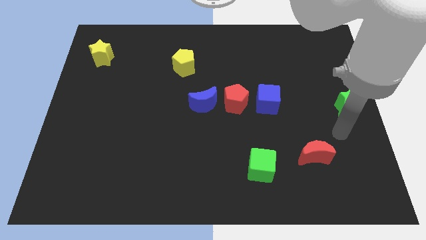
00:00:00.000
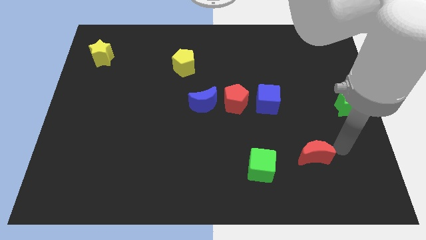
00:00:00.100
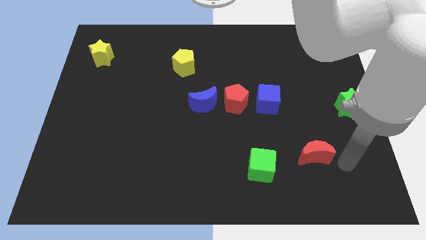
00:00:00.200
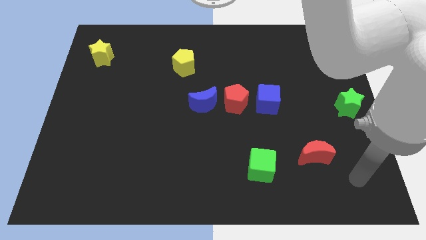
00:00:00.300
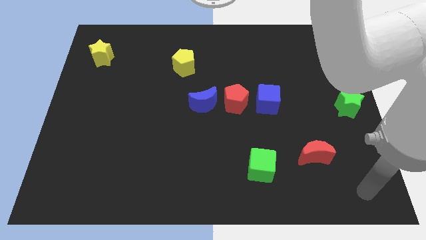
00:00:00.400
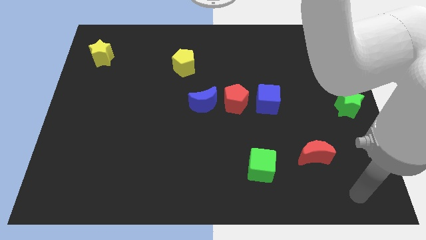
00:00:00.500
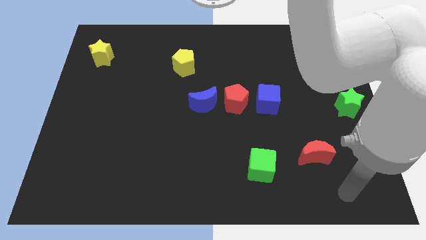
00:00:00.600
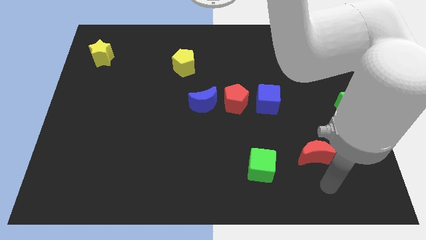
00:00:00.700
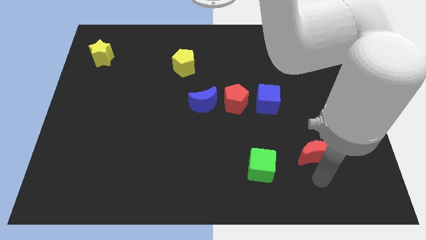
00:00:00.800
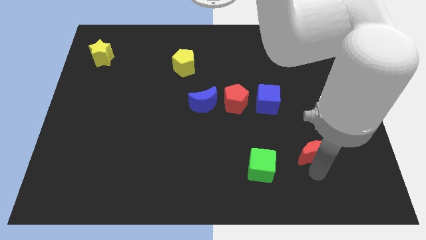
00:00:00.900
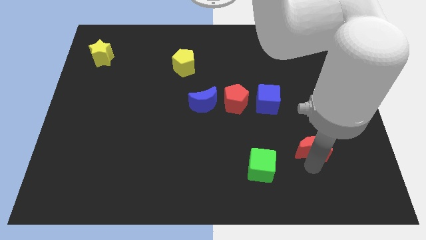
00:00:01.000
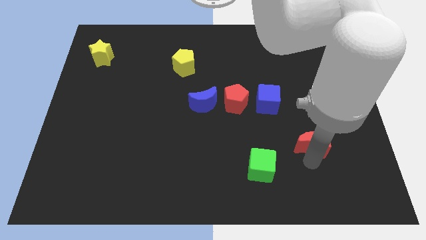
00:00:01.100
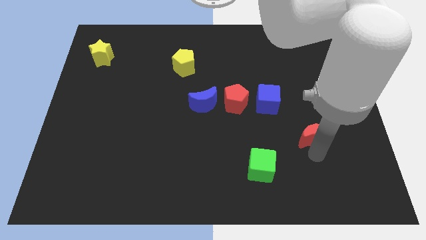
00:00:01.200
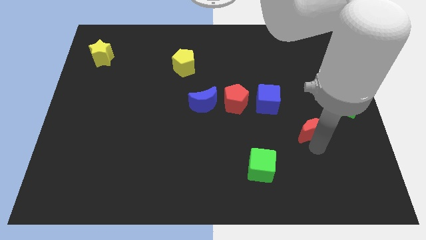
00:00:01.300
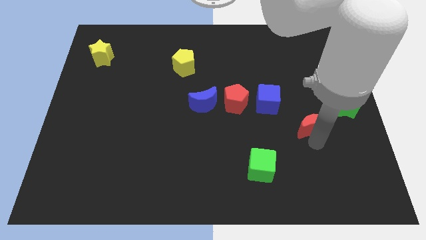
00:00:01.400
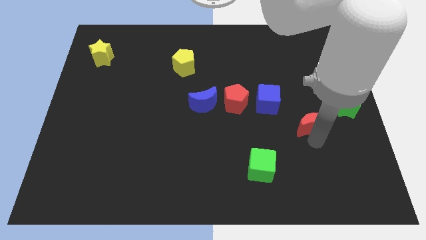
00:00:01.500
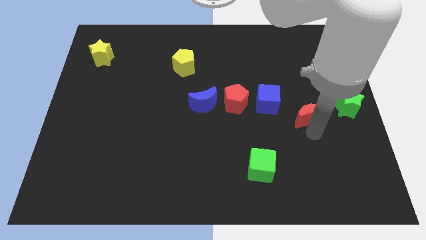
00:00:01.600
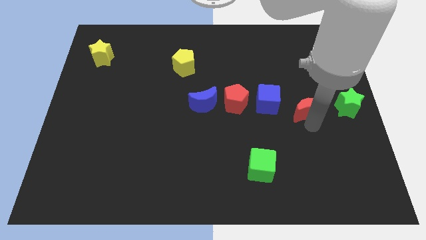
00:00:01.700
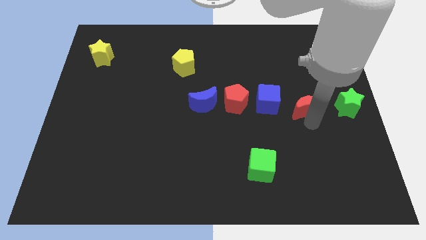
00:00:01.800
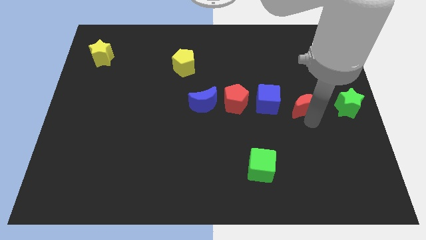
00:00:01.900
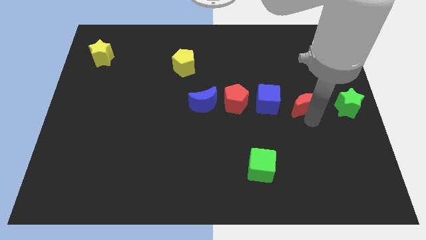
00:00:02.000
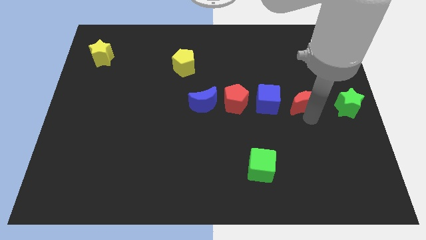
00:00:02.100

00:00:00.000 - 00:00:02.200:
slide the red moon to the right of the blue cube

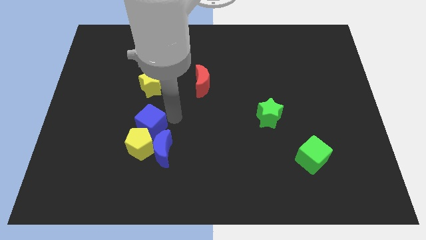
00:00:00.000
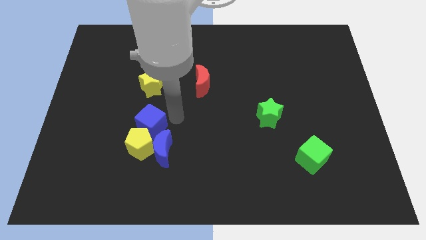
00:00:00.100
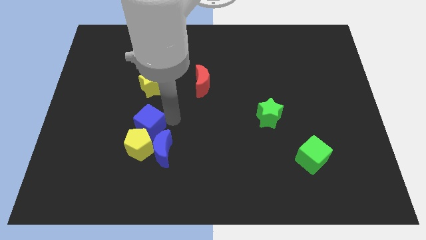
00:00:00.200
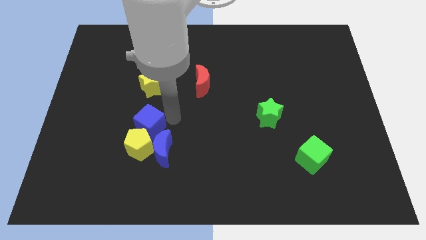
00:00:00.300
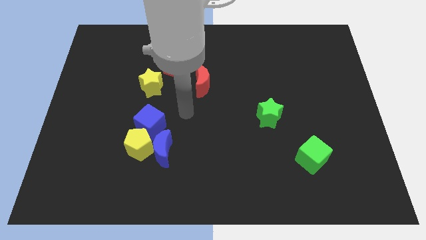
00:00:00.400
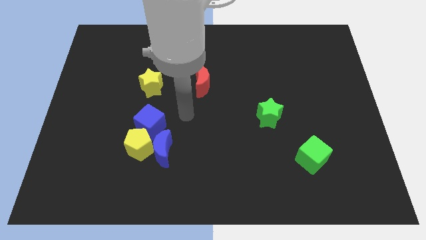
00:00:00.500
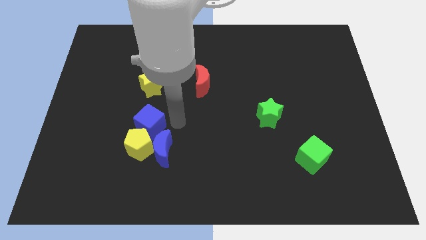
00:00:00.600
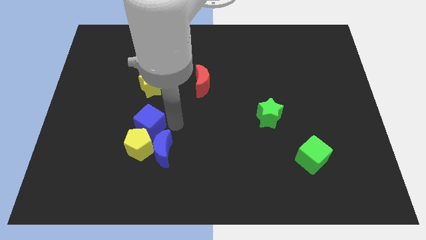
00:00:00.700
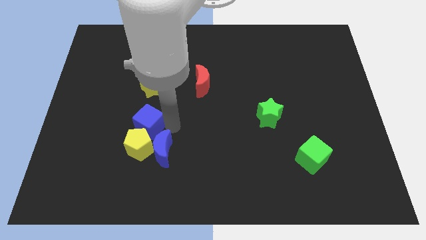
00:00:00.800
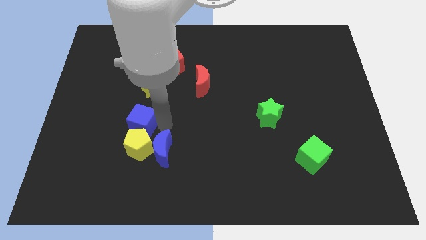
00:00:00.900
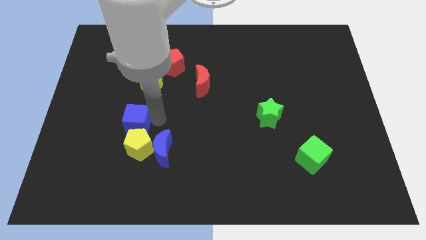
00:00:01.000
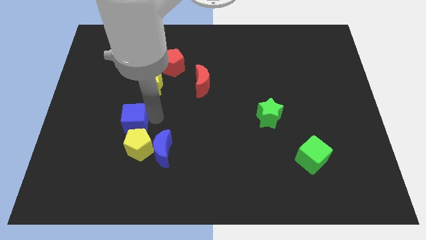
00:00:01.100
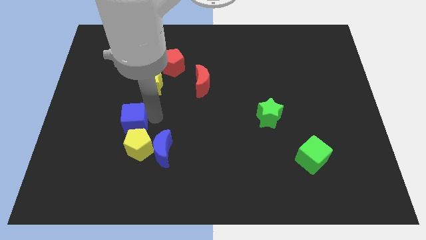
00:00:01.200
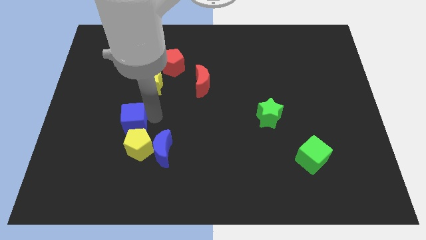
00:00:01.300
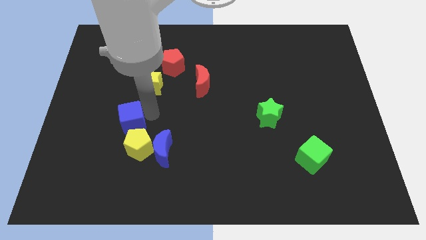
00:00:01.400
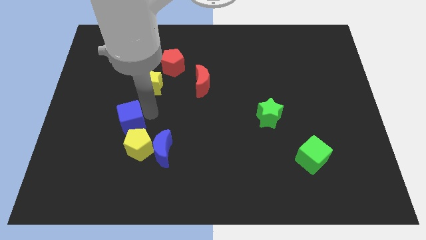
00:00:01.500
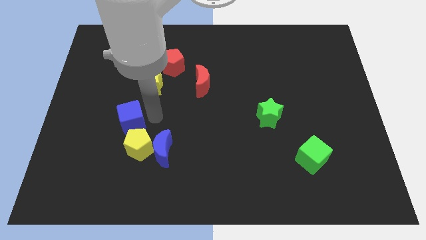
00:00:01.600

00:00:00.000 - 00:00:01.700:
push blue cube diagonally top left to the yellow pentagon

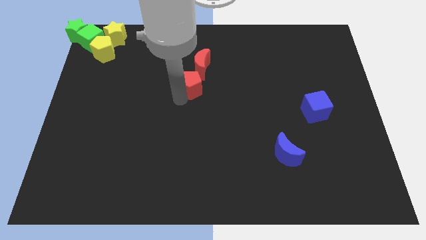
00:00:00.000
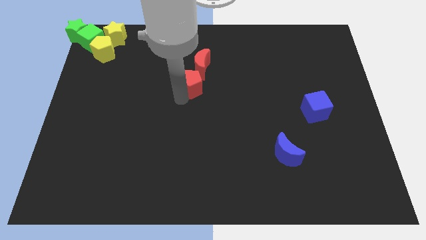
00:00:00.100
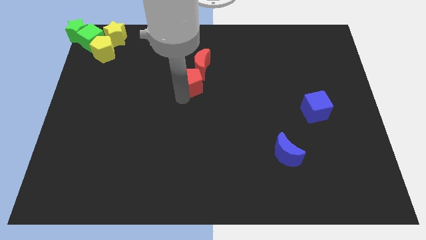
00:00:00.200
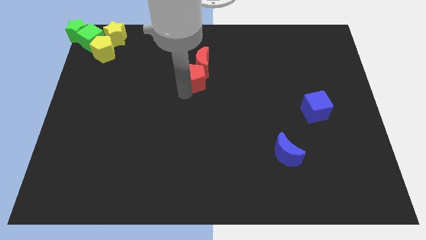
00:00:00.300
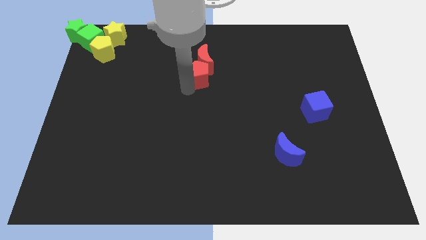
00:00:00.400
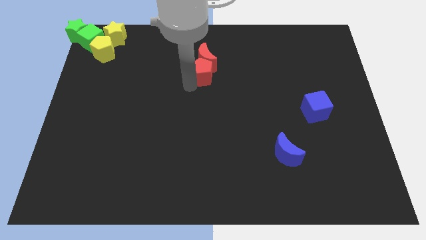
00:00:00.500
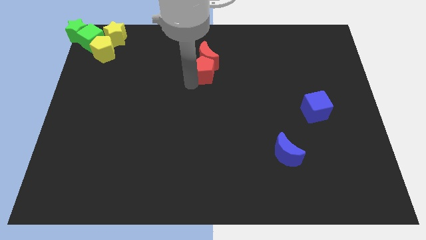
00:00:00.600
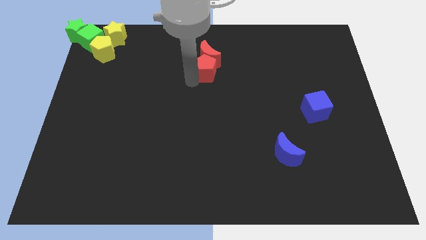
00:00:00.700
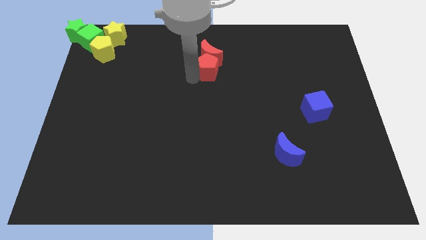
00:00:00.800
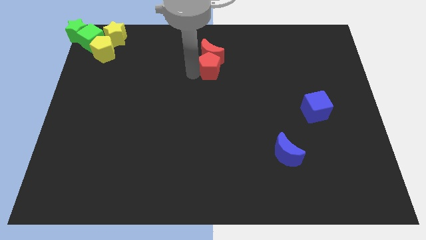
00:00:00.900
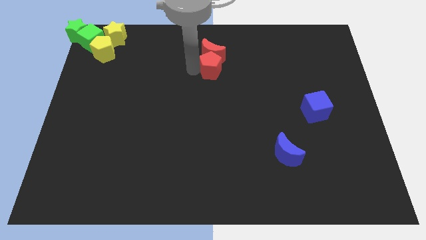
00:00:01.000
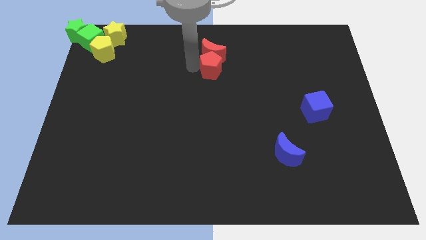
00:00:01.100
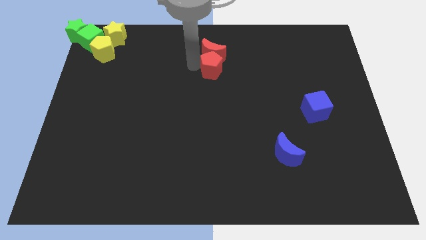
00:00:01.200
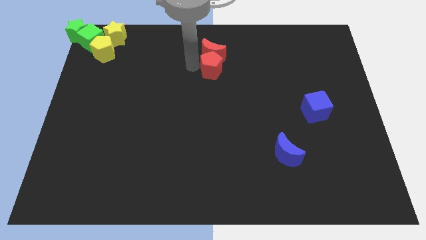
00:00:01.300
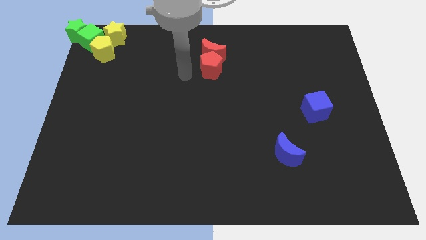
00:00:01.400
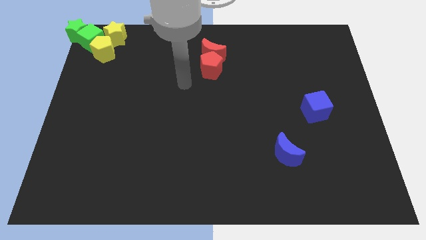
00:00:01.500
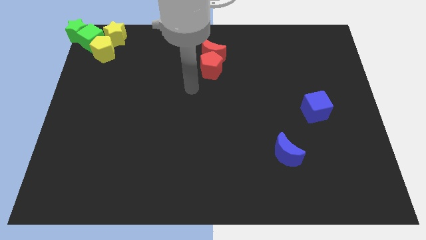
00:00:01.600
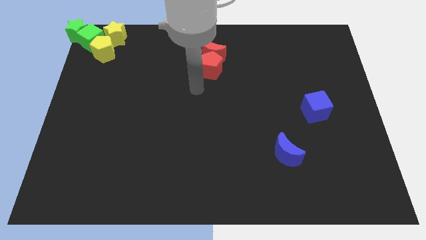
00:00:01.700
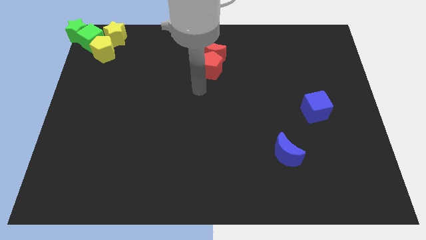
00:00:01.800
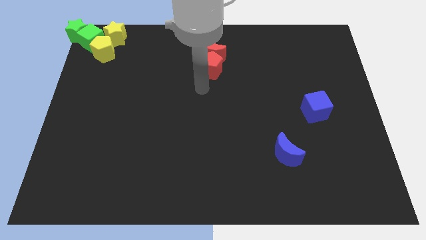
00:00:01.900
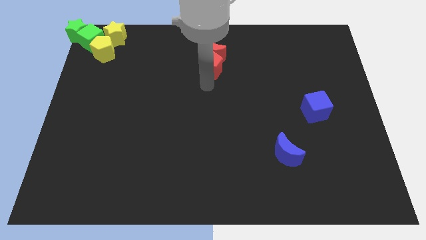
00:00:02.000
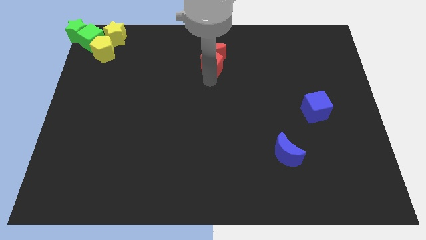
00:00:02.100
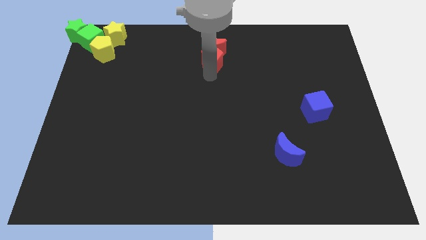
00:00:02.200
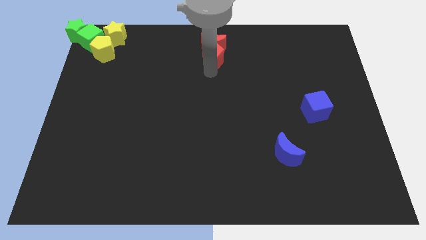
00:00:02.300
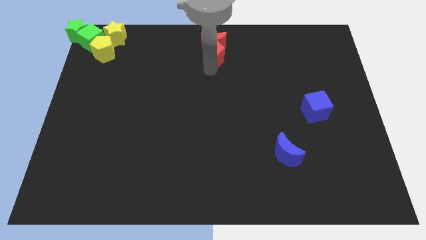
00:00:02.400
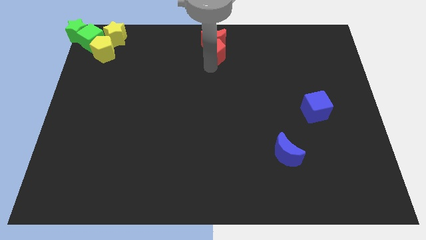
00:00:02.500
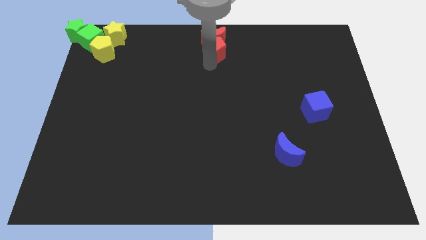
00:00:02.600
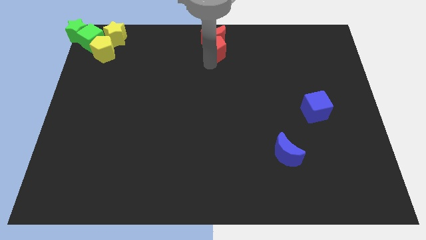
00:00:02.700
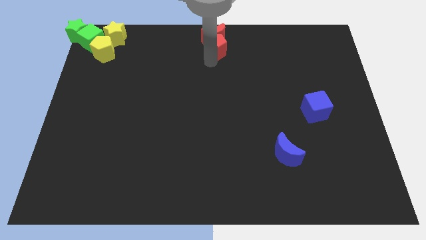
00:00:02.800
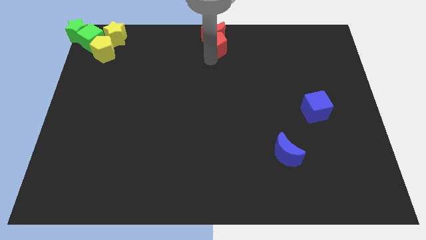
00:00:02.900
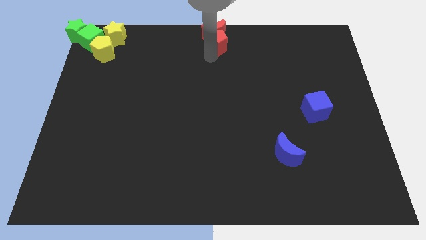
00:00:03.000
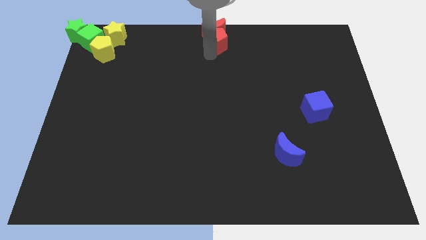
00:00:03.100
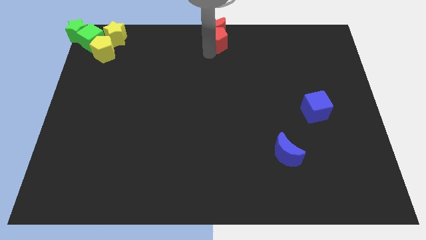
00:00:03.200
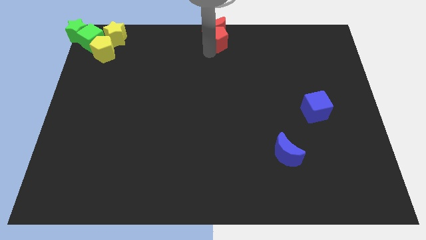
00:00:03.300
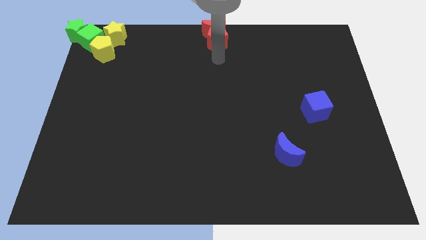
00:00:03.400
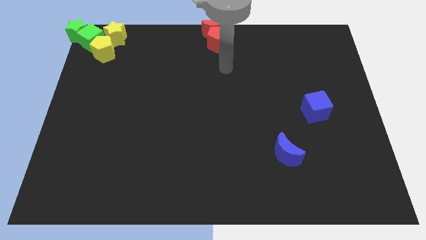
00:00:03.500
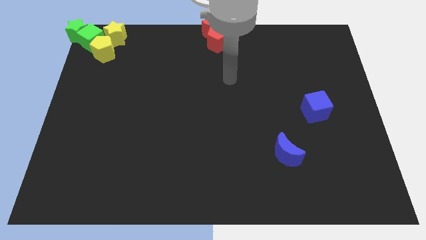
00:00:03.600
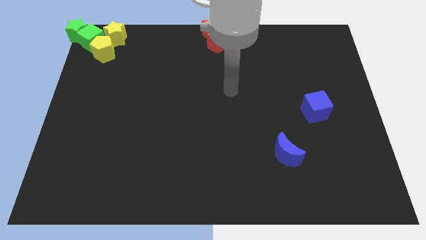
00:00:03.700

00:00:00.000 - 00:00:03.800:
push the red moon to the top center with red pentagon

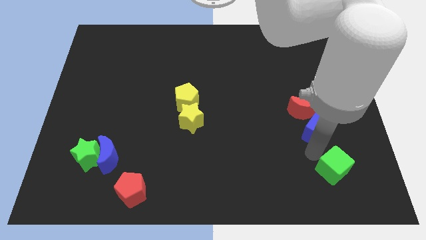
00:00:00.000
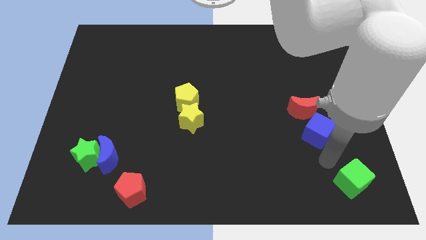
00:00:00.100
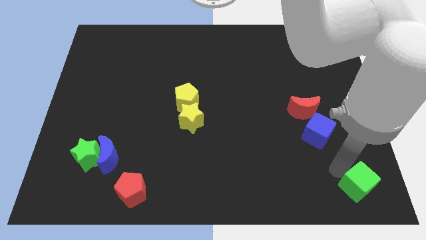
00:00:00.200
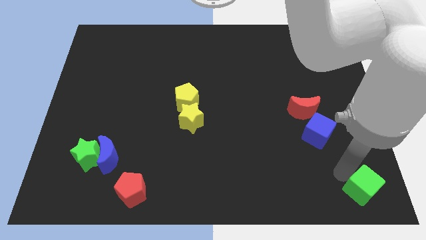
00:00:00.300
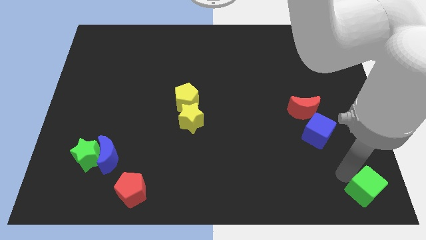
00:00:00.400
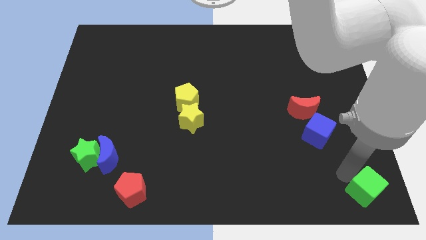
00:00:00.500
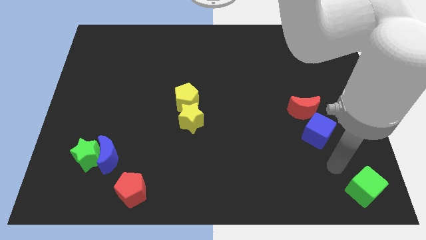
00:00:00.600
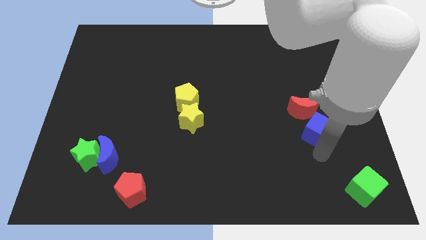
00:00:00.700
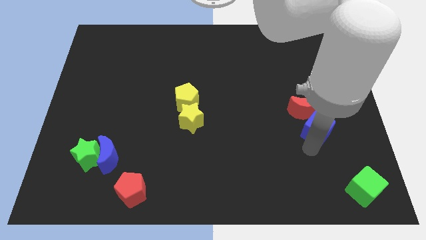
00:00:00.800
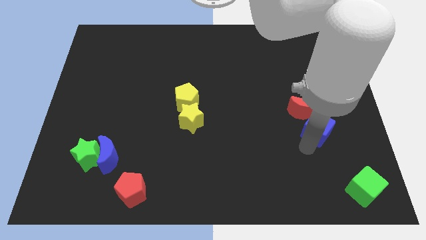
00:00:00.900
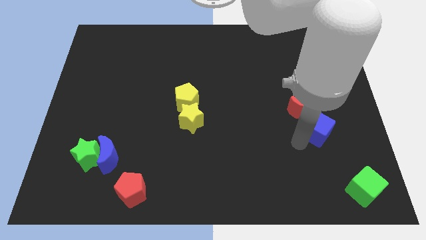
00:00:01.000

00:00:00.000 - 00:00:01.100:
place the green cube to the bottom right to the board

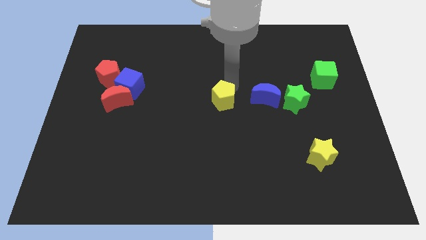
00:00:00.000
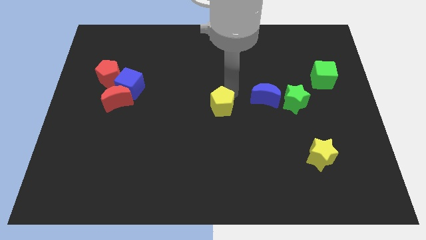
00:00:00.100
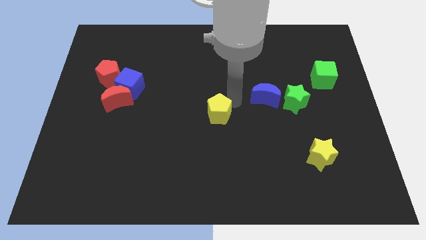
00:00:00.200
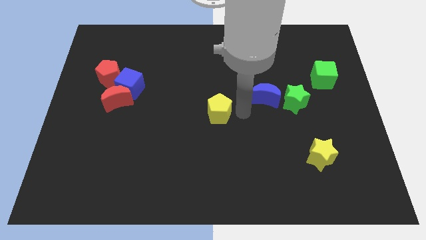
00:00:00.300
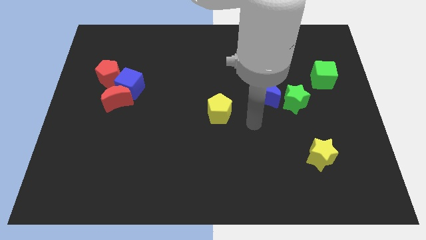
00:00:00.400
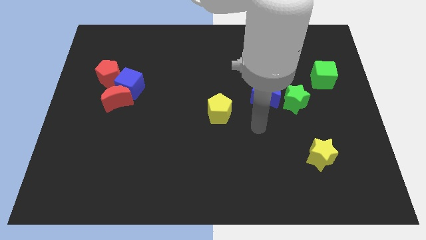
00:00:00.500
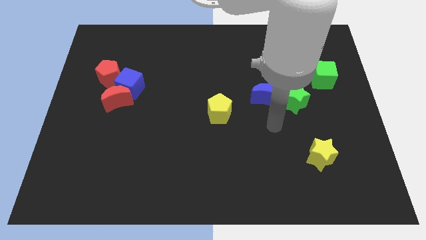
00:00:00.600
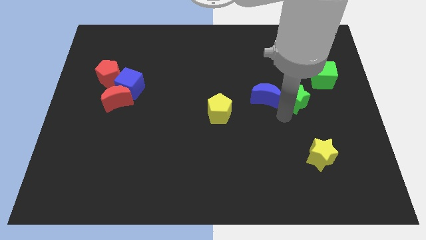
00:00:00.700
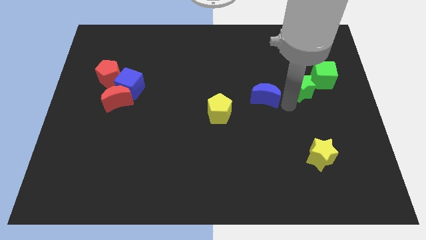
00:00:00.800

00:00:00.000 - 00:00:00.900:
push the green star close to the green cube
